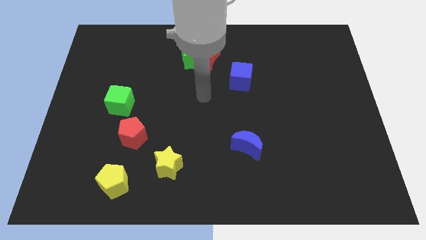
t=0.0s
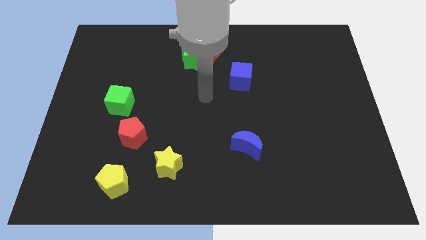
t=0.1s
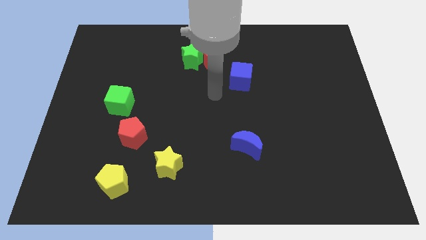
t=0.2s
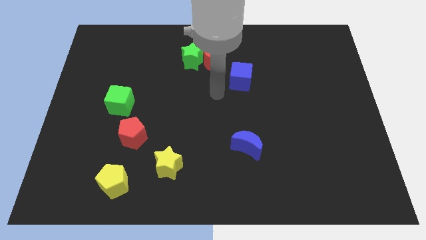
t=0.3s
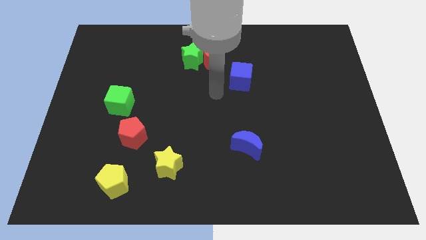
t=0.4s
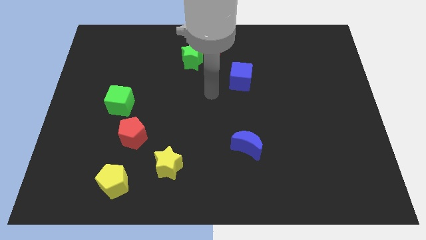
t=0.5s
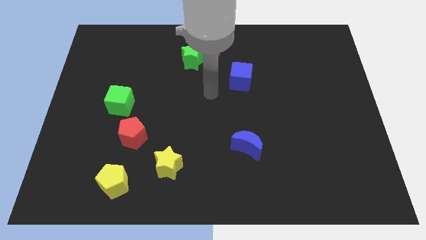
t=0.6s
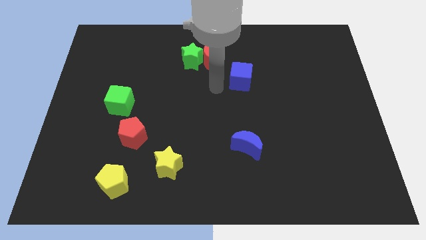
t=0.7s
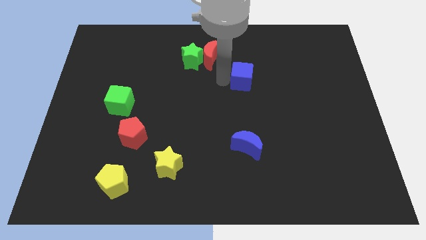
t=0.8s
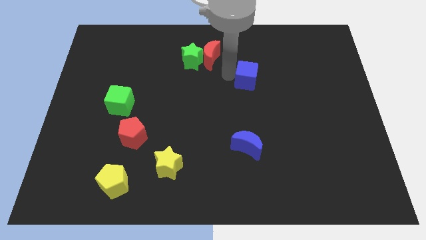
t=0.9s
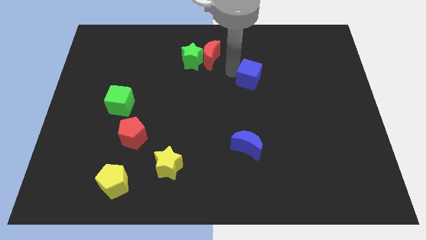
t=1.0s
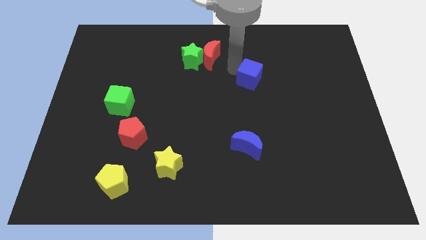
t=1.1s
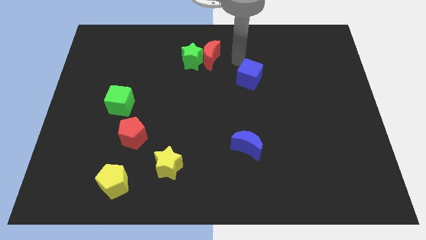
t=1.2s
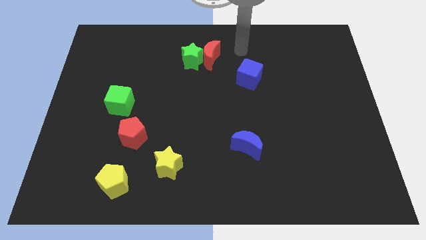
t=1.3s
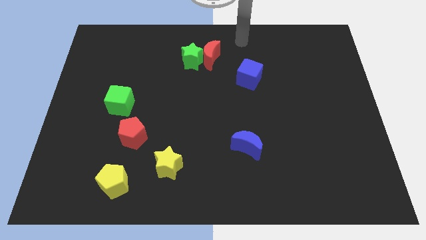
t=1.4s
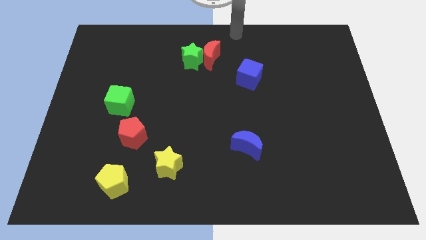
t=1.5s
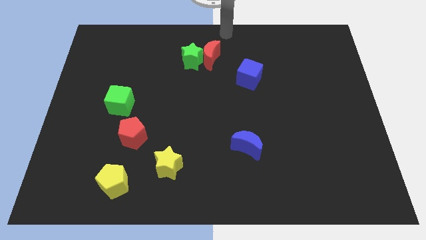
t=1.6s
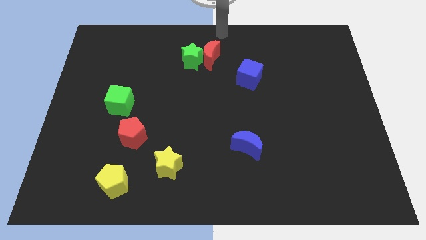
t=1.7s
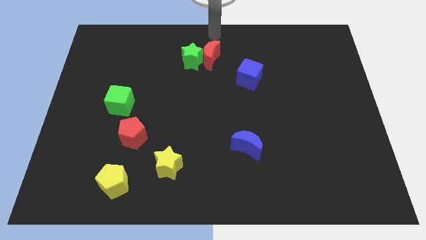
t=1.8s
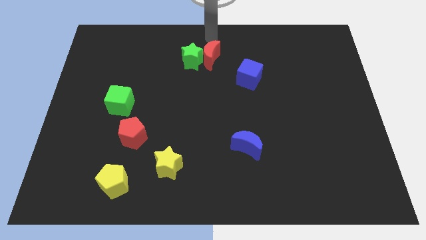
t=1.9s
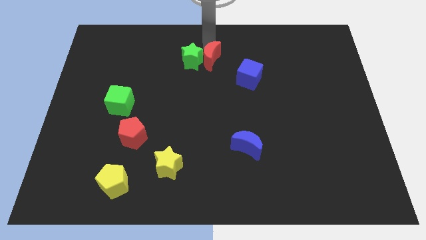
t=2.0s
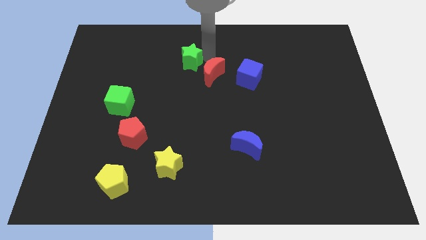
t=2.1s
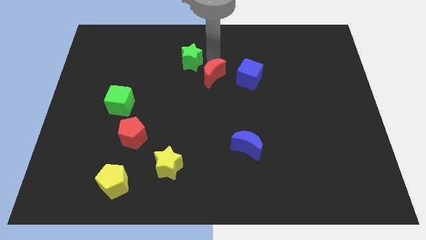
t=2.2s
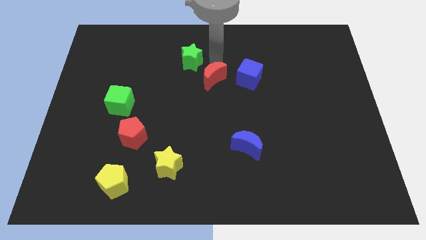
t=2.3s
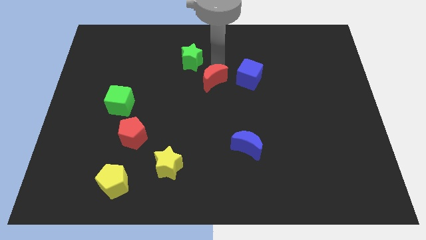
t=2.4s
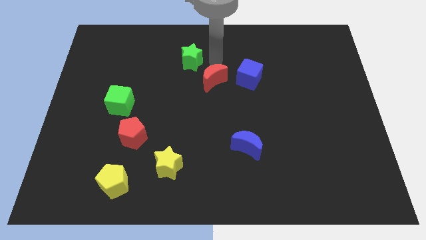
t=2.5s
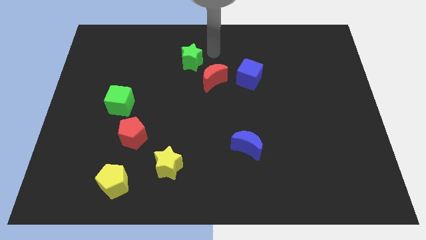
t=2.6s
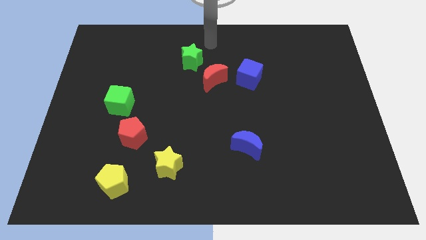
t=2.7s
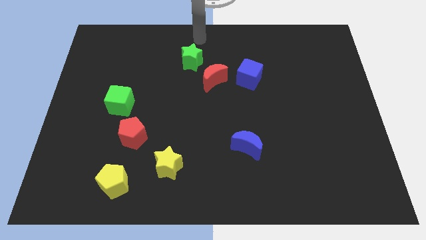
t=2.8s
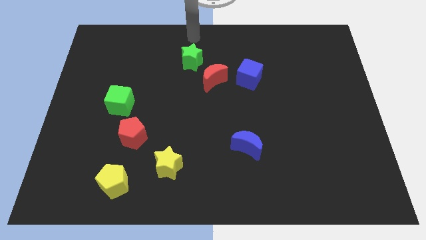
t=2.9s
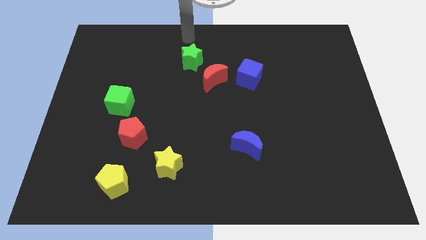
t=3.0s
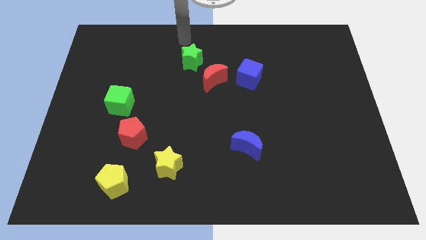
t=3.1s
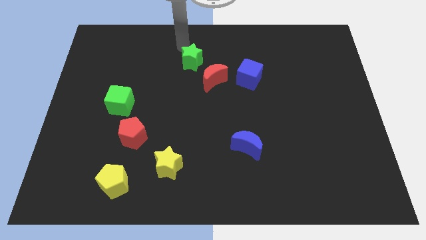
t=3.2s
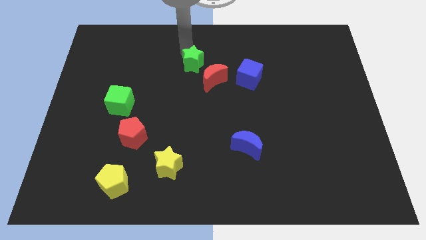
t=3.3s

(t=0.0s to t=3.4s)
place the red crescent to the left of the blue cube

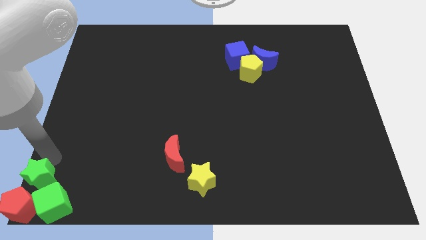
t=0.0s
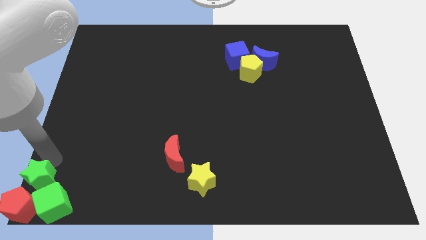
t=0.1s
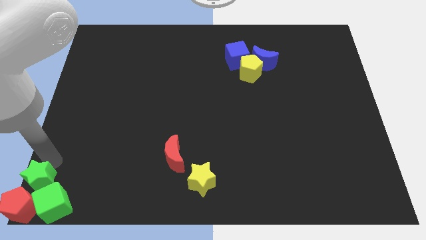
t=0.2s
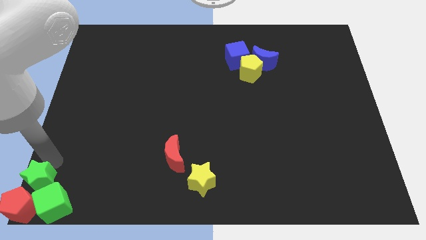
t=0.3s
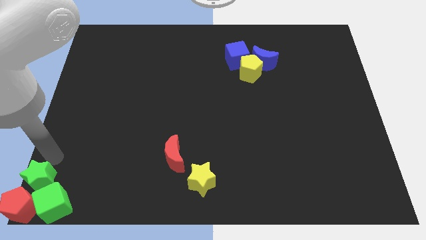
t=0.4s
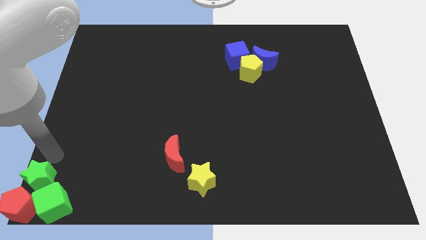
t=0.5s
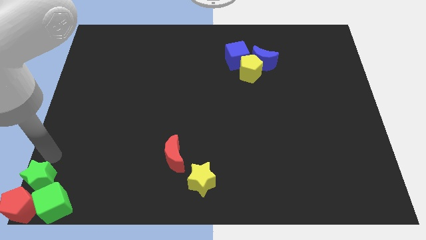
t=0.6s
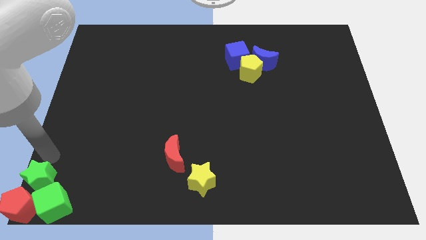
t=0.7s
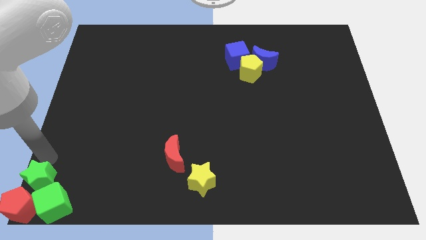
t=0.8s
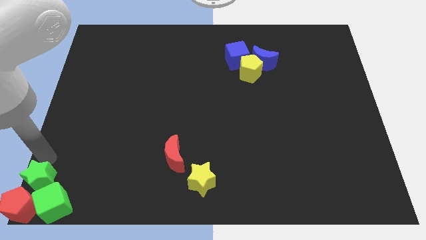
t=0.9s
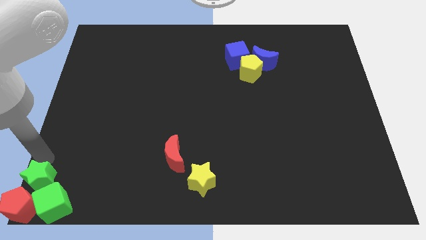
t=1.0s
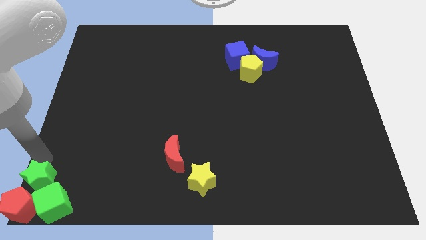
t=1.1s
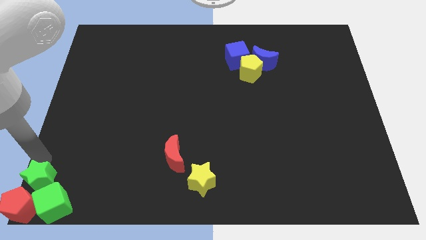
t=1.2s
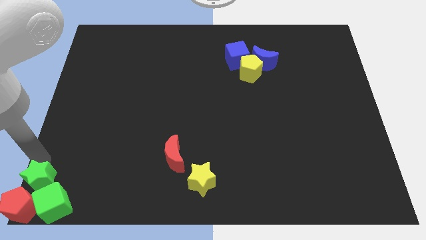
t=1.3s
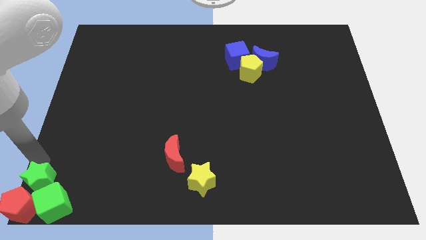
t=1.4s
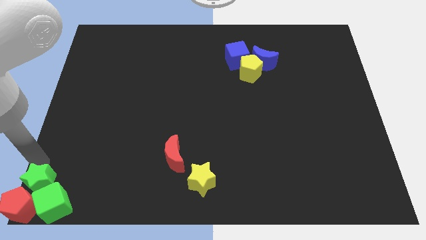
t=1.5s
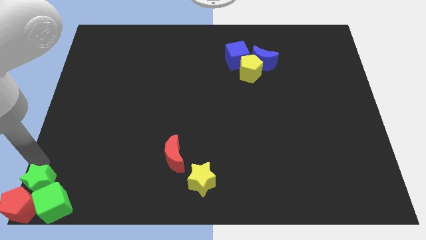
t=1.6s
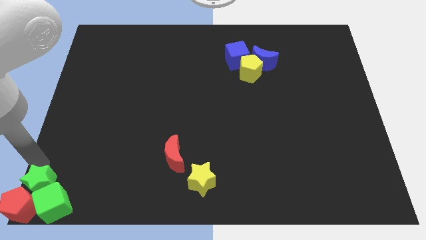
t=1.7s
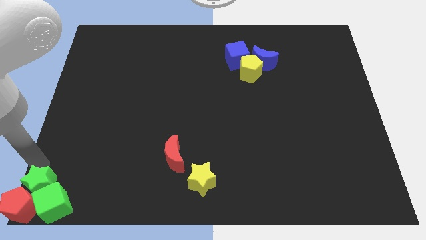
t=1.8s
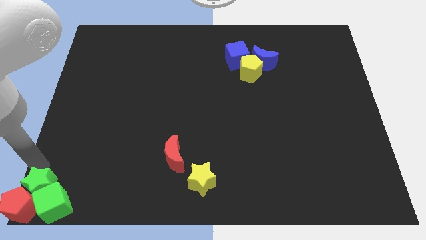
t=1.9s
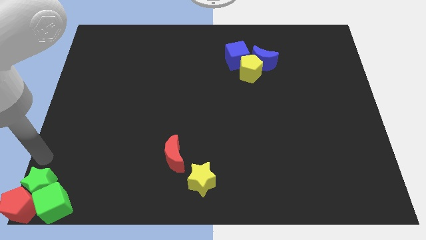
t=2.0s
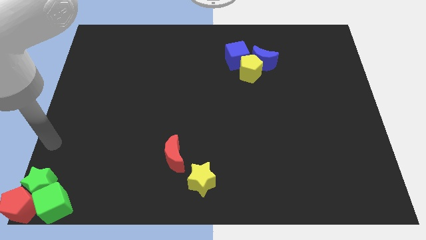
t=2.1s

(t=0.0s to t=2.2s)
push the green star into the green cube

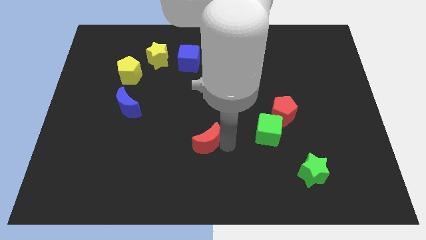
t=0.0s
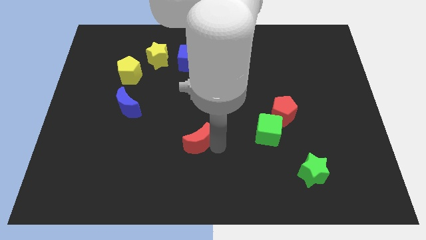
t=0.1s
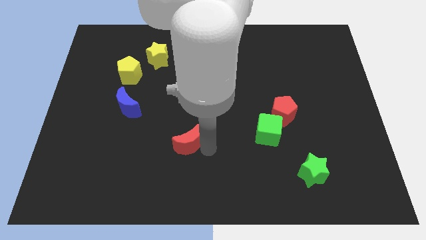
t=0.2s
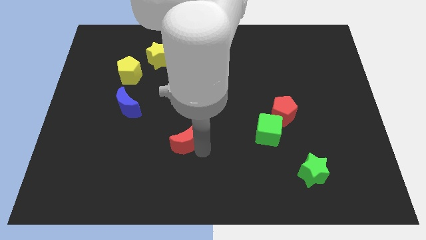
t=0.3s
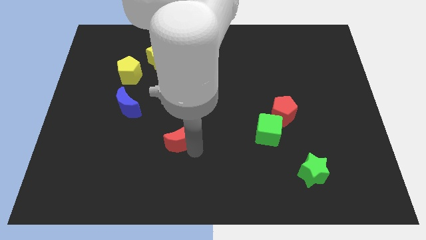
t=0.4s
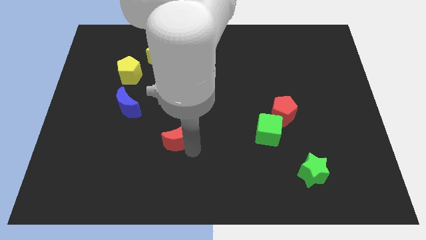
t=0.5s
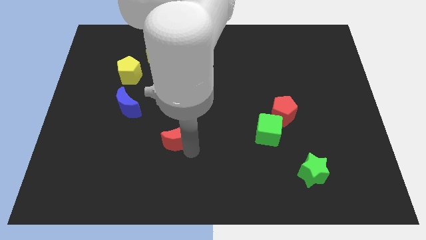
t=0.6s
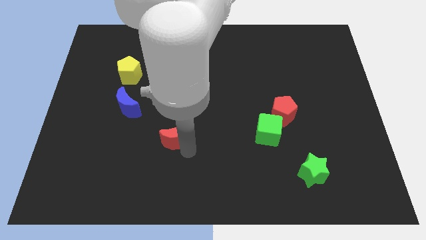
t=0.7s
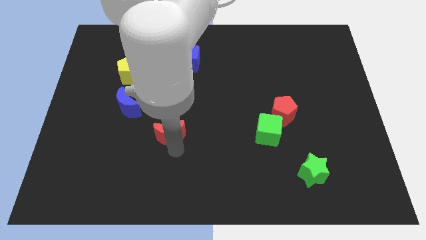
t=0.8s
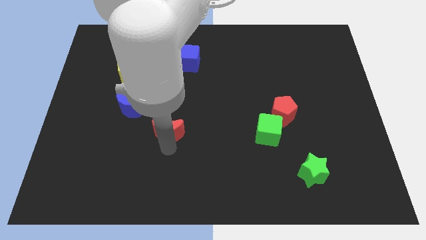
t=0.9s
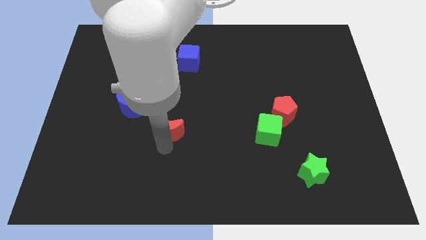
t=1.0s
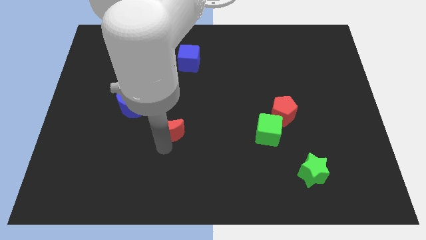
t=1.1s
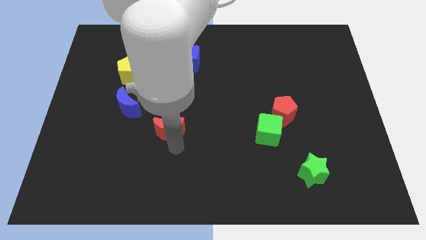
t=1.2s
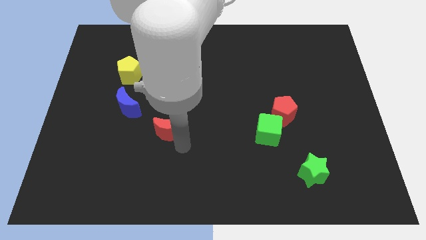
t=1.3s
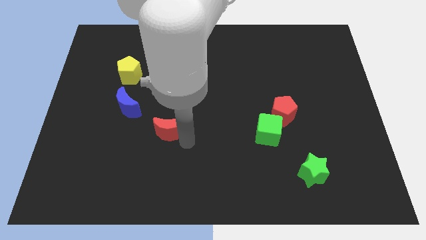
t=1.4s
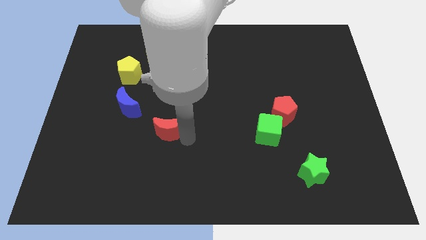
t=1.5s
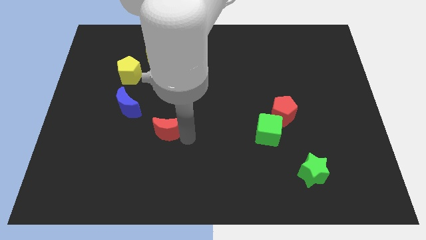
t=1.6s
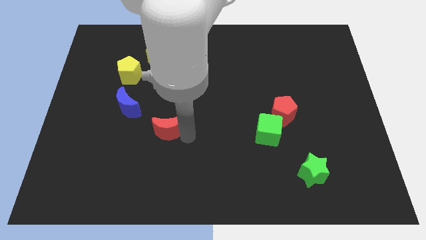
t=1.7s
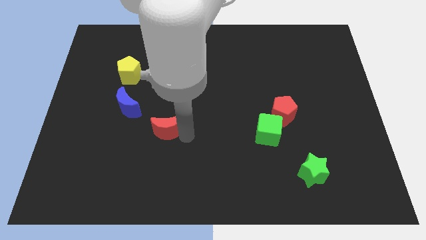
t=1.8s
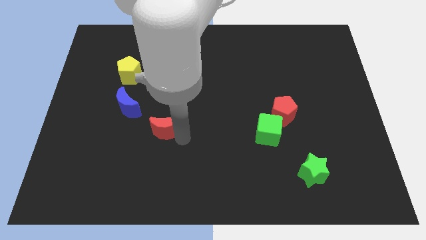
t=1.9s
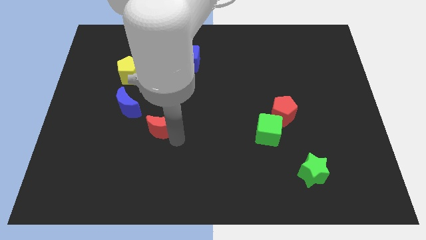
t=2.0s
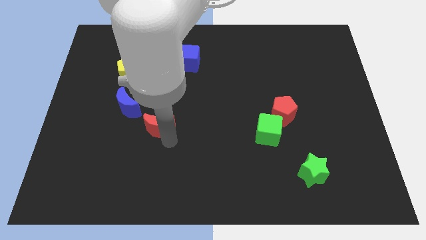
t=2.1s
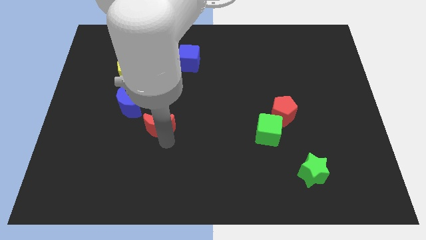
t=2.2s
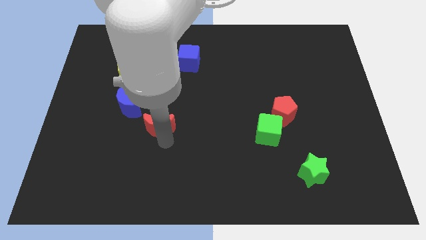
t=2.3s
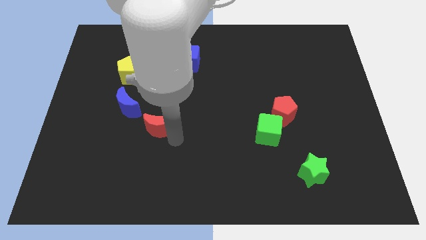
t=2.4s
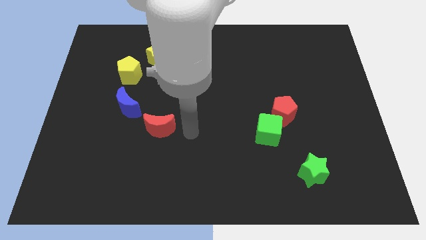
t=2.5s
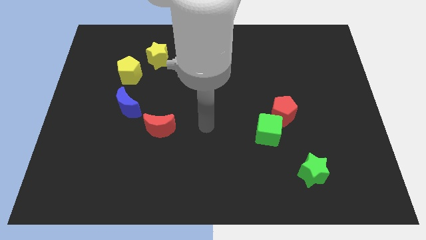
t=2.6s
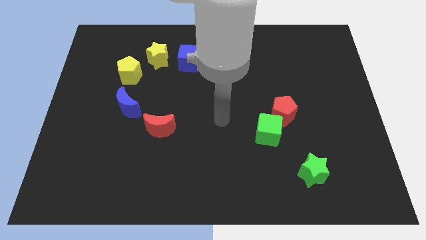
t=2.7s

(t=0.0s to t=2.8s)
place the red moon vertically below the yellow star

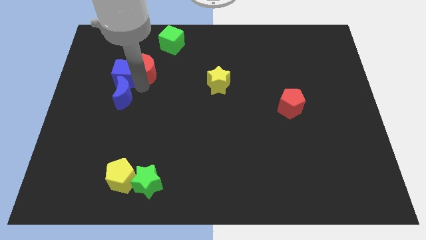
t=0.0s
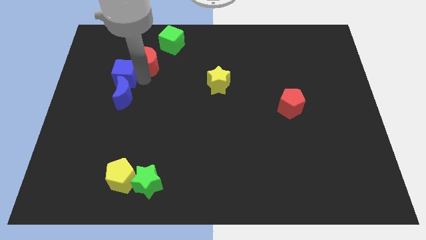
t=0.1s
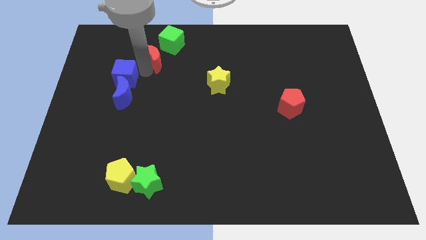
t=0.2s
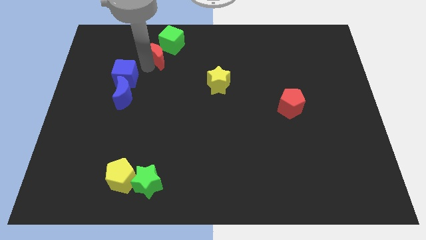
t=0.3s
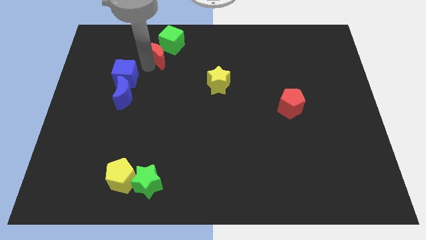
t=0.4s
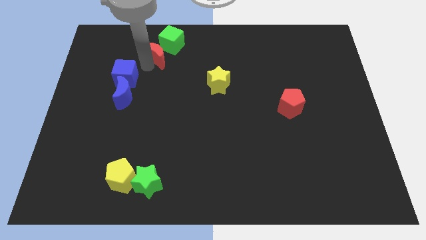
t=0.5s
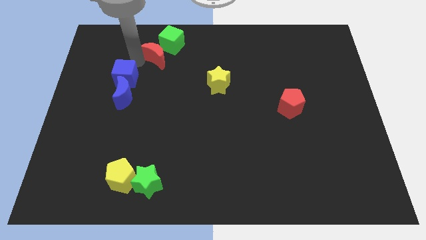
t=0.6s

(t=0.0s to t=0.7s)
separate the red moon from the blue block
